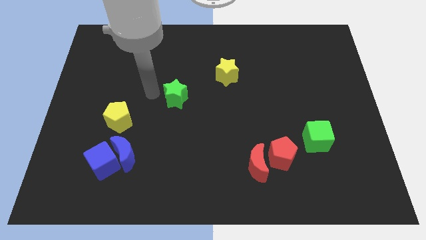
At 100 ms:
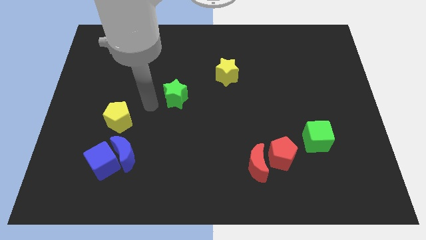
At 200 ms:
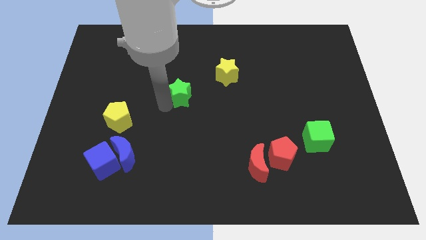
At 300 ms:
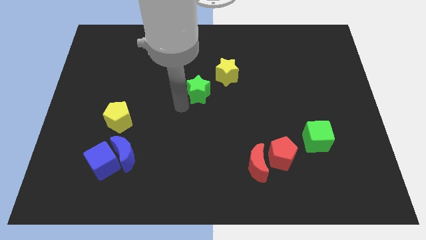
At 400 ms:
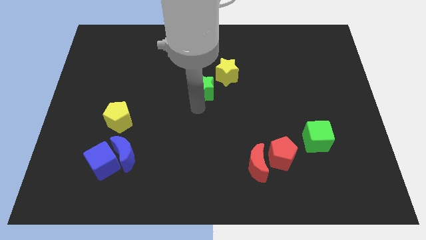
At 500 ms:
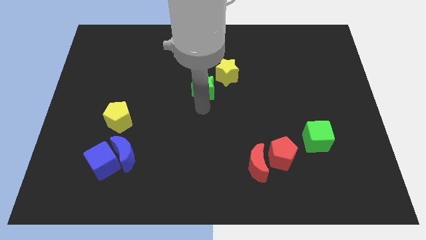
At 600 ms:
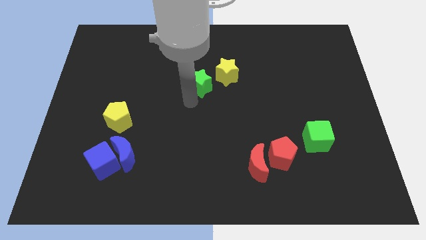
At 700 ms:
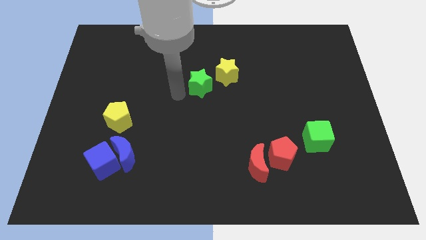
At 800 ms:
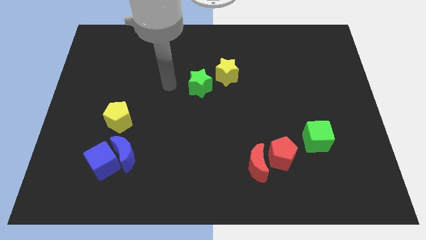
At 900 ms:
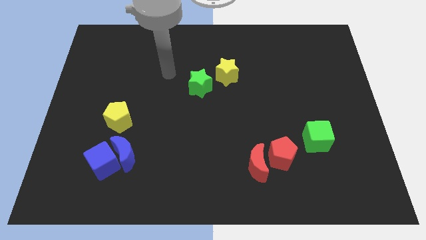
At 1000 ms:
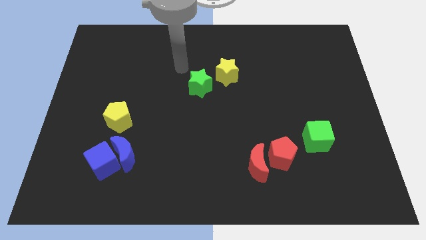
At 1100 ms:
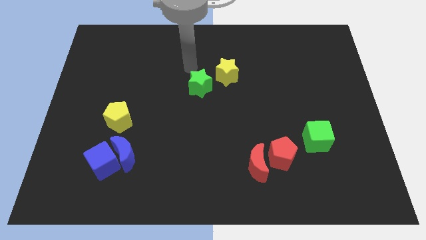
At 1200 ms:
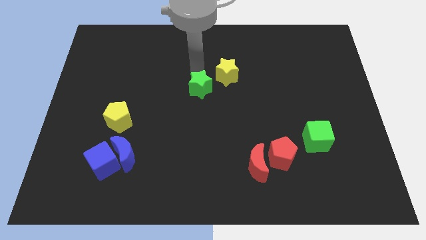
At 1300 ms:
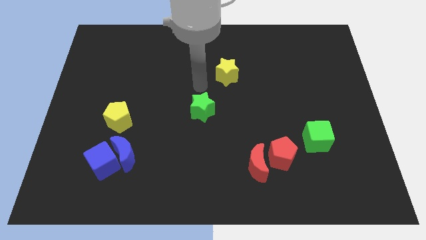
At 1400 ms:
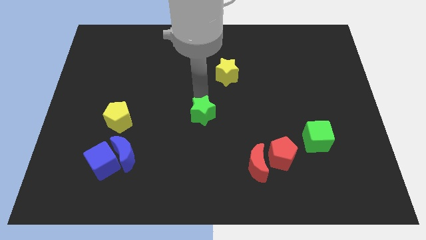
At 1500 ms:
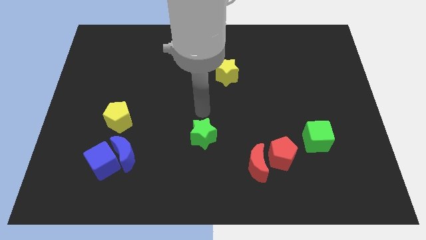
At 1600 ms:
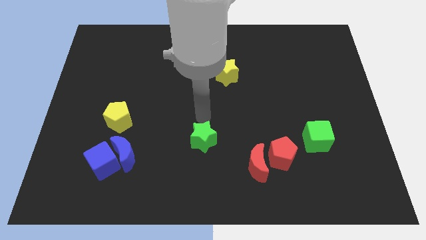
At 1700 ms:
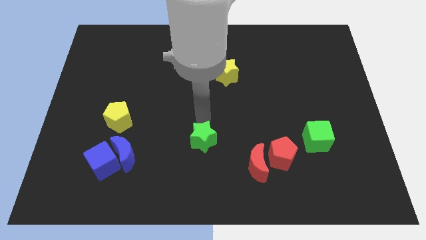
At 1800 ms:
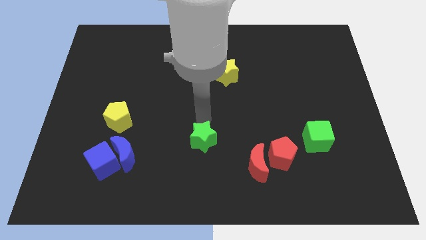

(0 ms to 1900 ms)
move the green star towards right of blue blocks

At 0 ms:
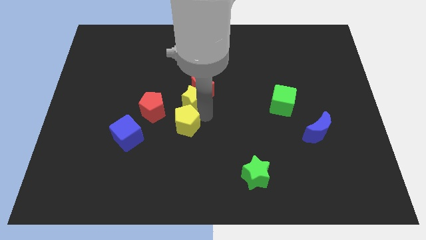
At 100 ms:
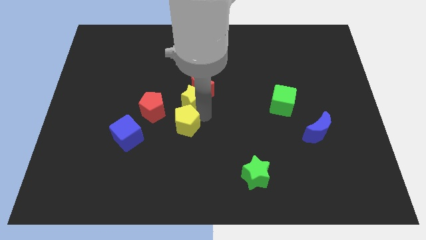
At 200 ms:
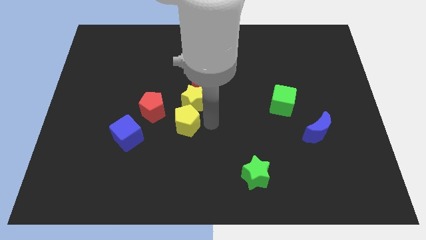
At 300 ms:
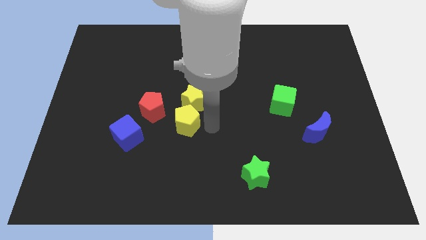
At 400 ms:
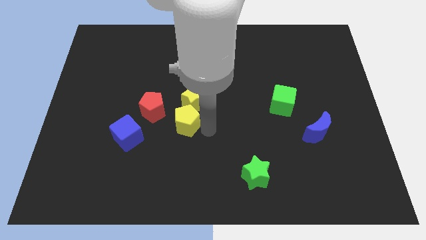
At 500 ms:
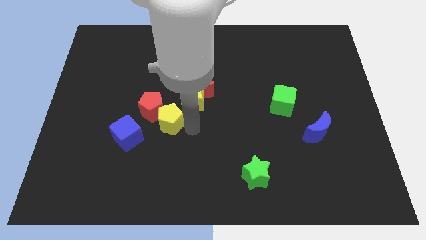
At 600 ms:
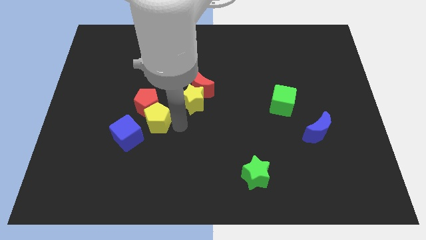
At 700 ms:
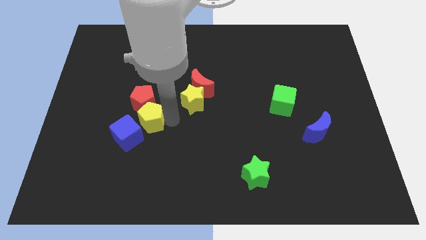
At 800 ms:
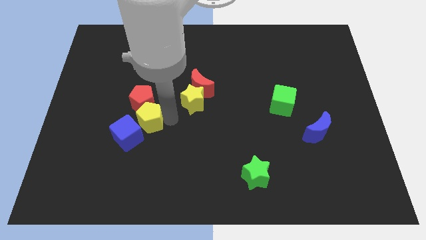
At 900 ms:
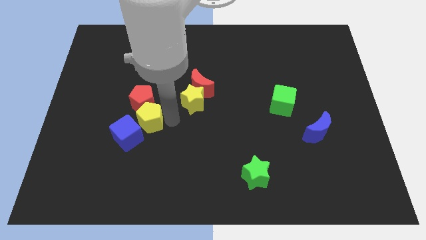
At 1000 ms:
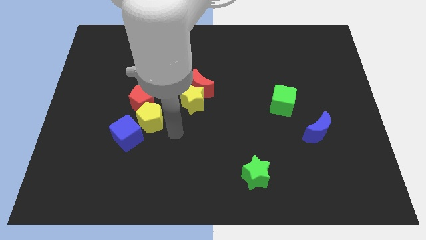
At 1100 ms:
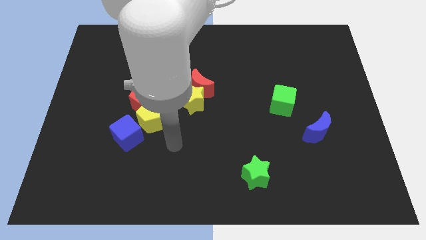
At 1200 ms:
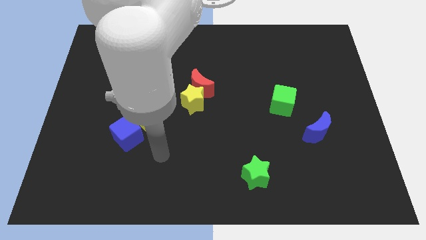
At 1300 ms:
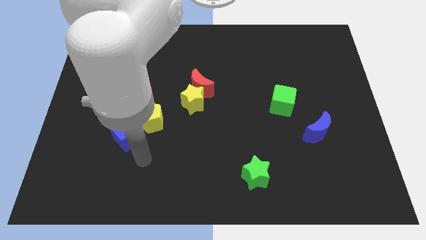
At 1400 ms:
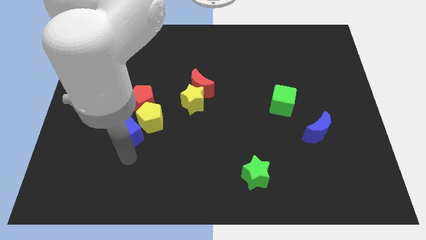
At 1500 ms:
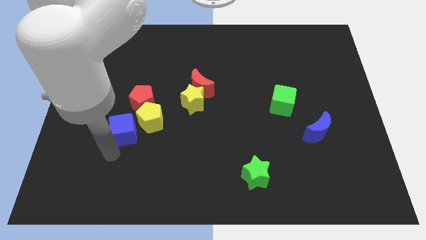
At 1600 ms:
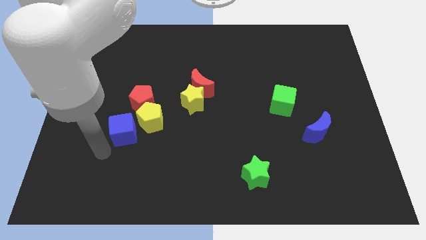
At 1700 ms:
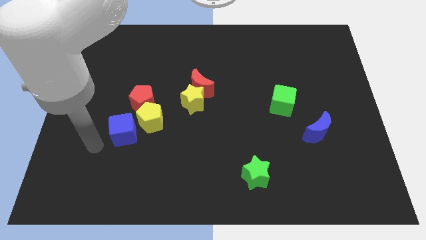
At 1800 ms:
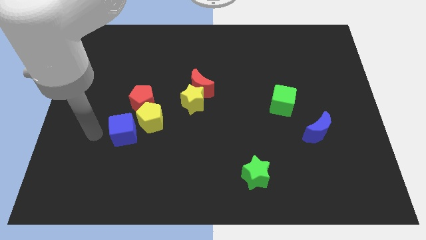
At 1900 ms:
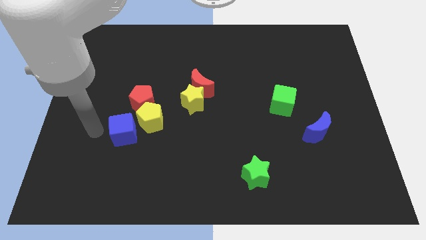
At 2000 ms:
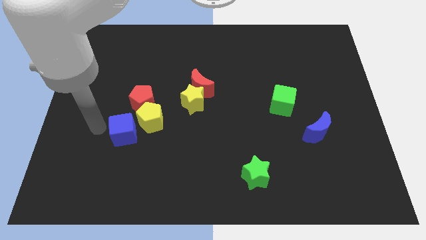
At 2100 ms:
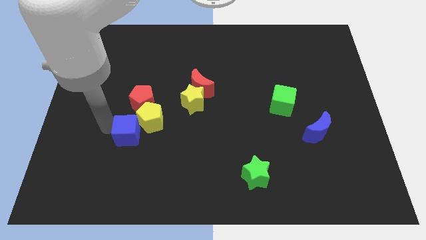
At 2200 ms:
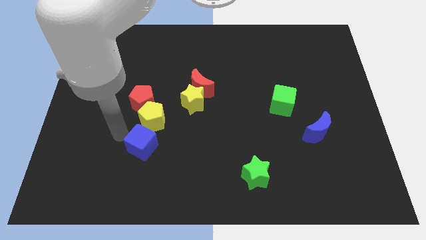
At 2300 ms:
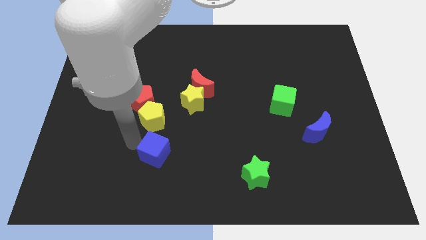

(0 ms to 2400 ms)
place the blue cube down to the yellow pentagon

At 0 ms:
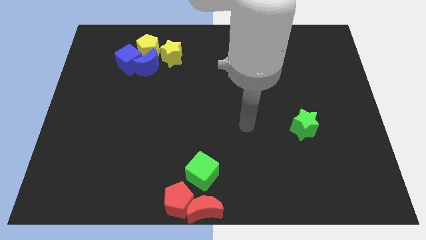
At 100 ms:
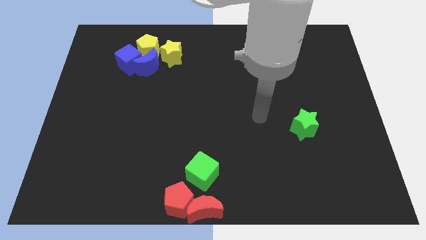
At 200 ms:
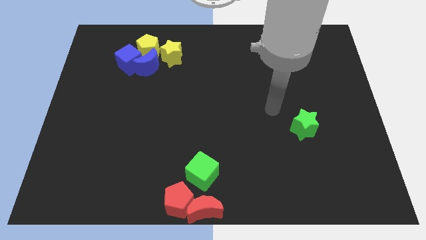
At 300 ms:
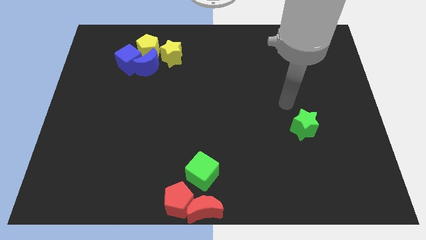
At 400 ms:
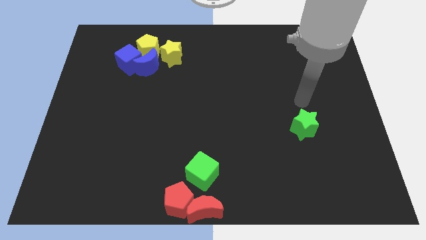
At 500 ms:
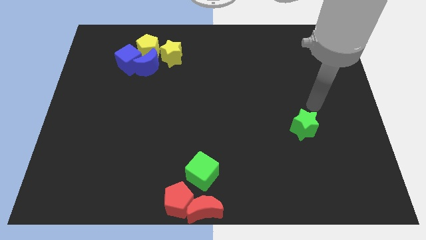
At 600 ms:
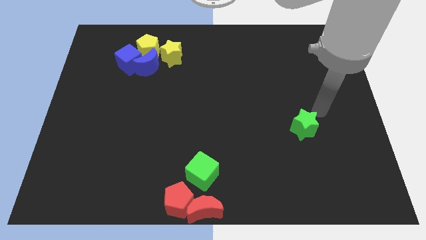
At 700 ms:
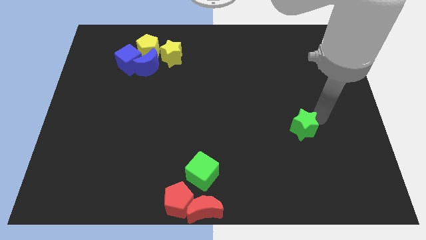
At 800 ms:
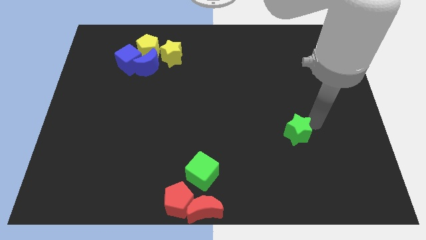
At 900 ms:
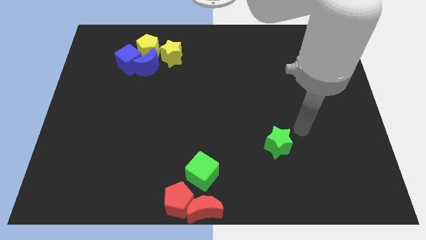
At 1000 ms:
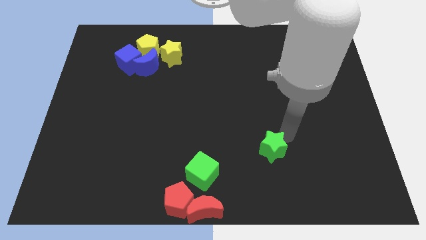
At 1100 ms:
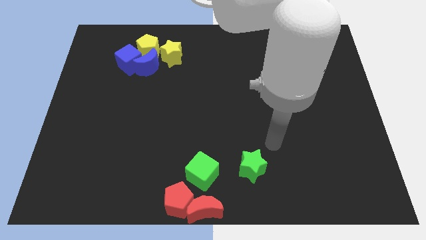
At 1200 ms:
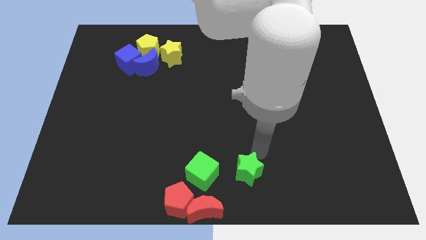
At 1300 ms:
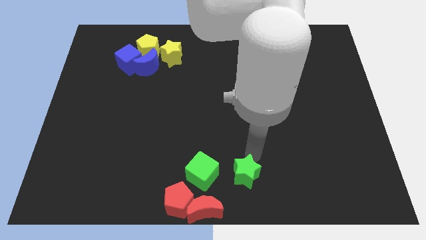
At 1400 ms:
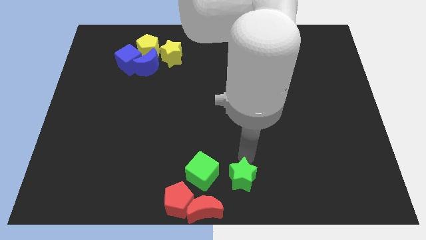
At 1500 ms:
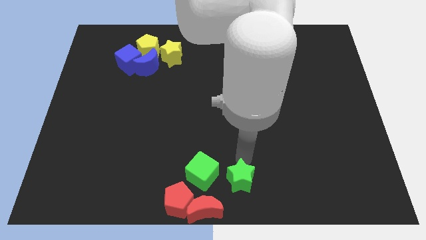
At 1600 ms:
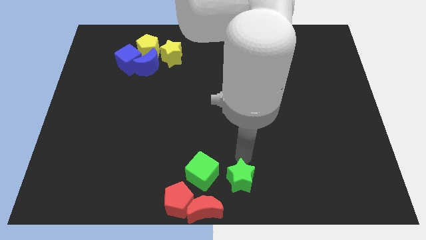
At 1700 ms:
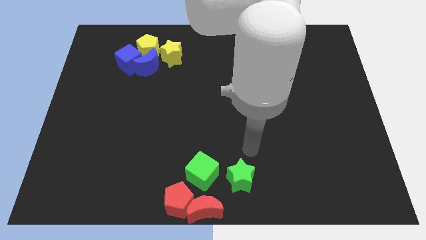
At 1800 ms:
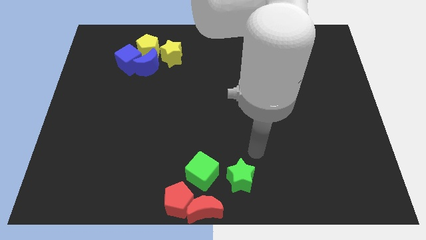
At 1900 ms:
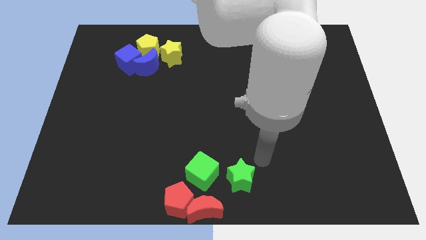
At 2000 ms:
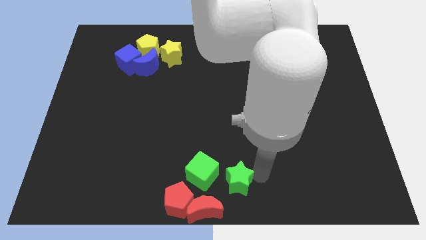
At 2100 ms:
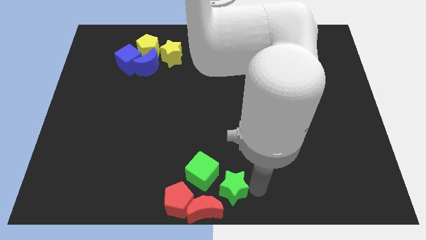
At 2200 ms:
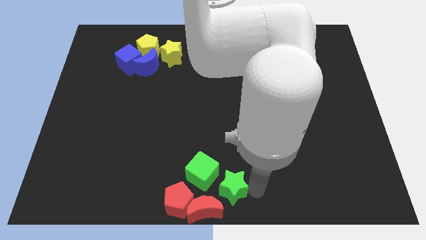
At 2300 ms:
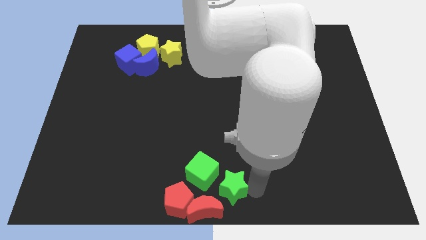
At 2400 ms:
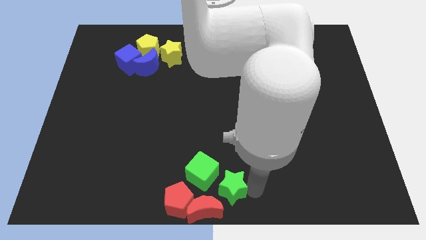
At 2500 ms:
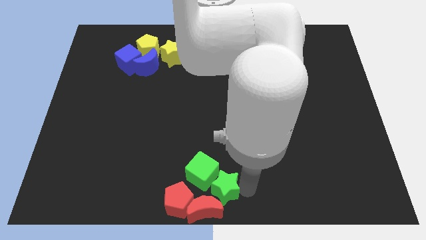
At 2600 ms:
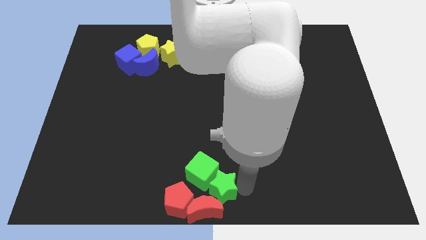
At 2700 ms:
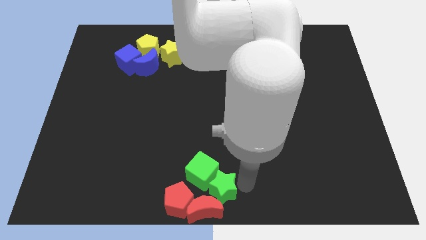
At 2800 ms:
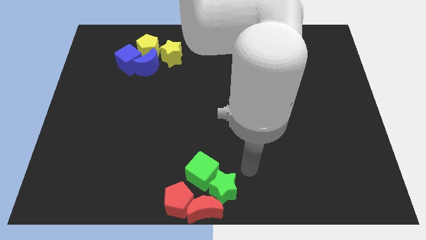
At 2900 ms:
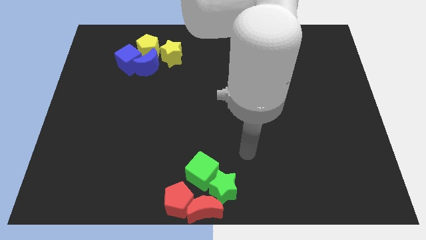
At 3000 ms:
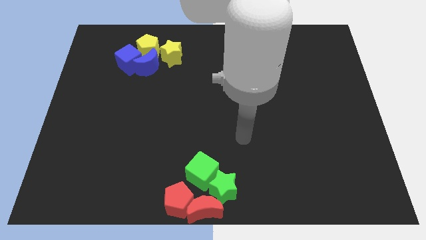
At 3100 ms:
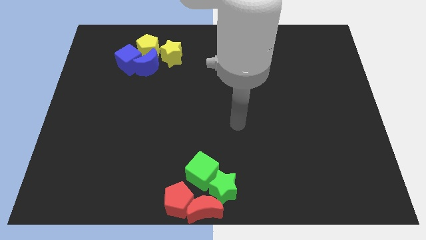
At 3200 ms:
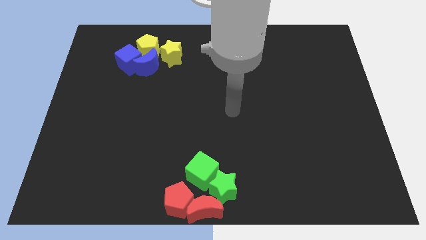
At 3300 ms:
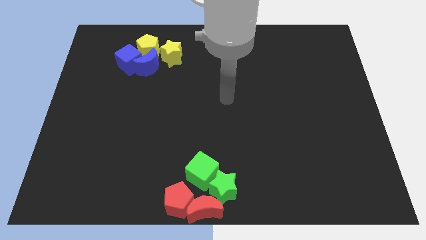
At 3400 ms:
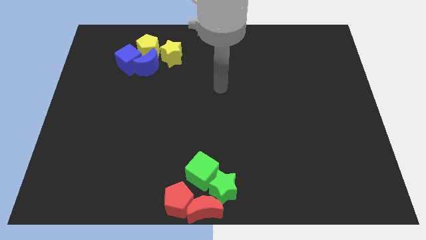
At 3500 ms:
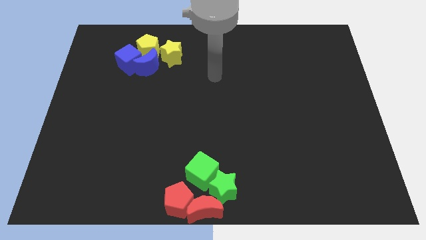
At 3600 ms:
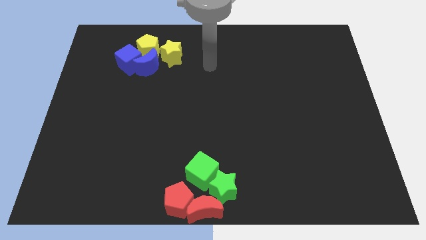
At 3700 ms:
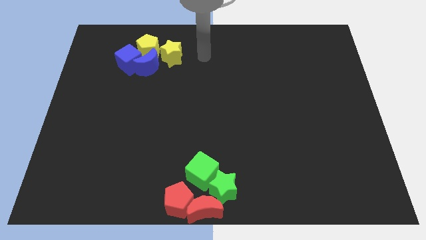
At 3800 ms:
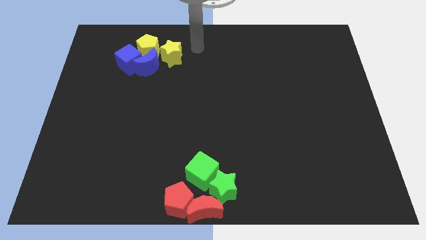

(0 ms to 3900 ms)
push the green star close to the green cube

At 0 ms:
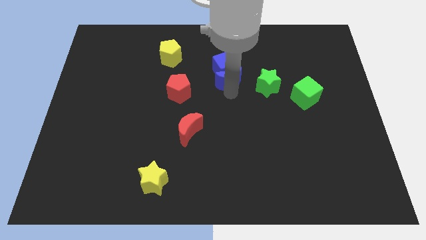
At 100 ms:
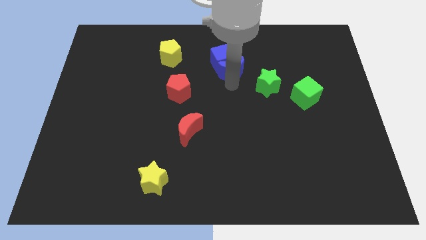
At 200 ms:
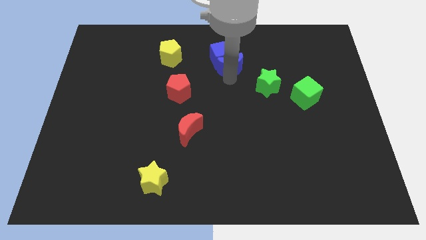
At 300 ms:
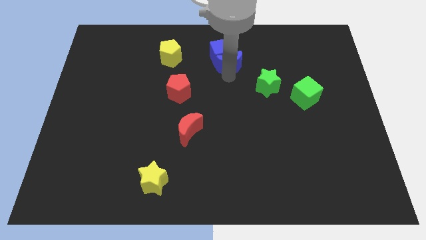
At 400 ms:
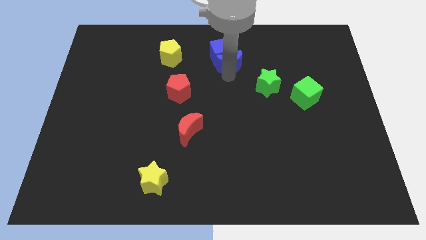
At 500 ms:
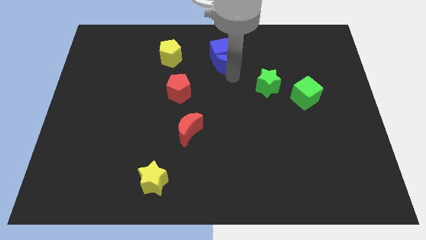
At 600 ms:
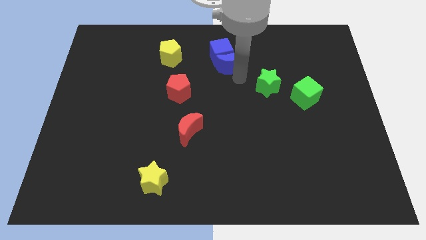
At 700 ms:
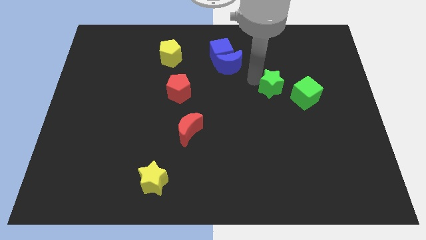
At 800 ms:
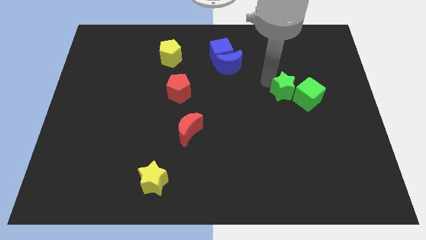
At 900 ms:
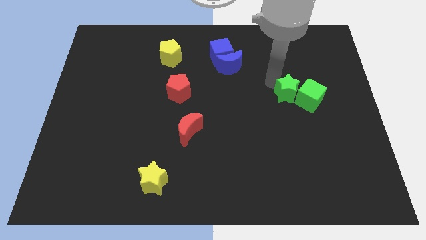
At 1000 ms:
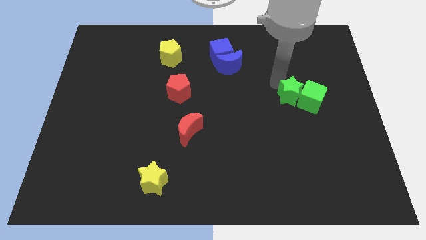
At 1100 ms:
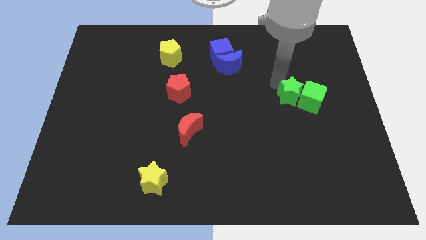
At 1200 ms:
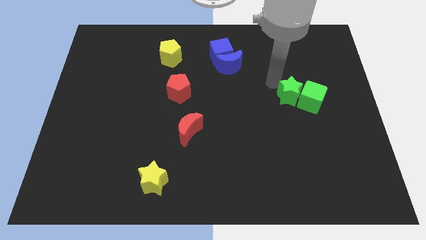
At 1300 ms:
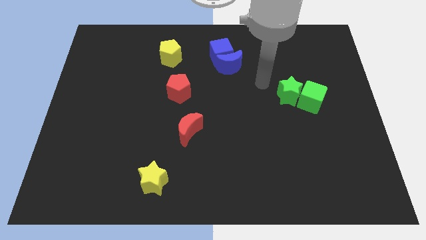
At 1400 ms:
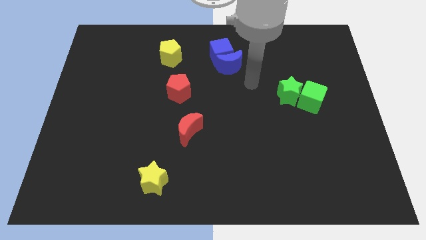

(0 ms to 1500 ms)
push the green star into the left of the green cube
